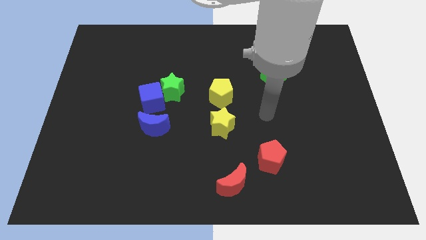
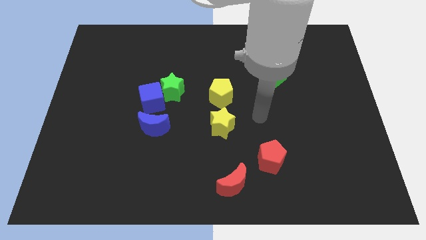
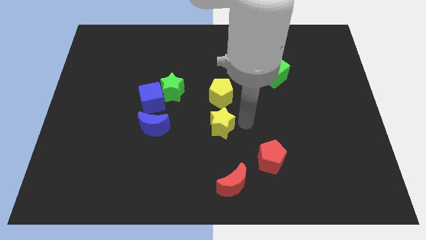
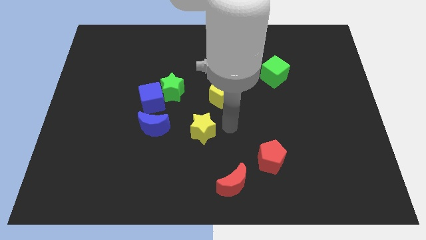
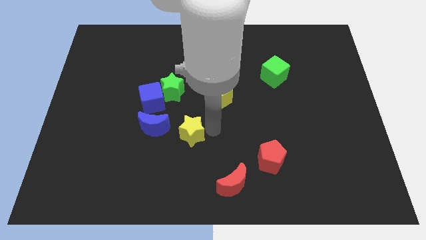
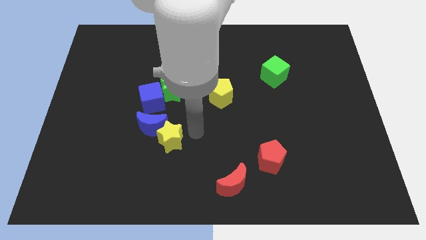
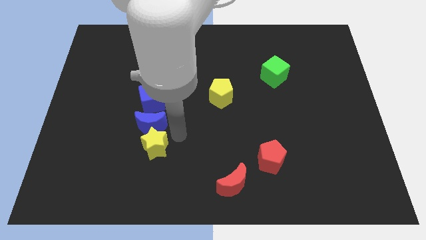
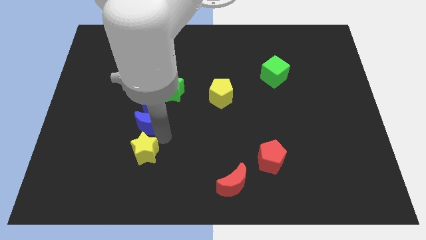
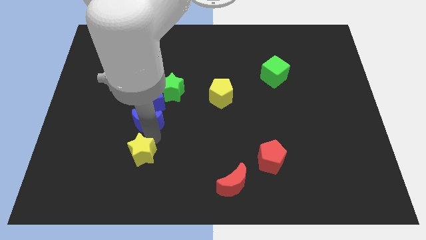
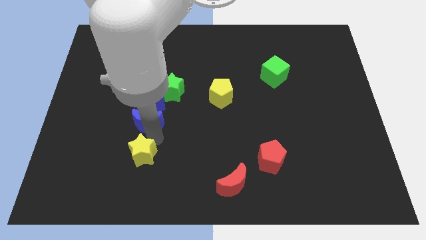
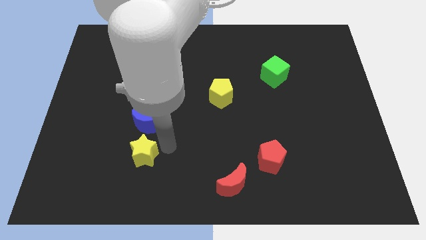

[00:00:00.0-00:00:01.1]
drag the yellow star below the blue moon

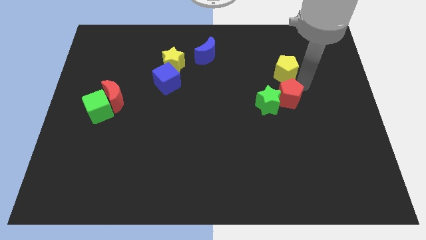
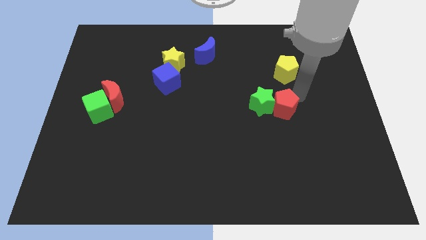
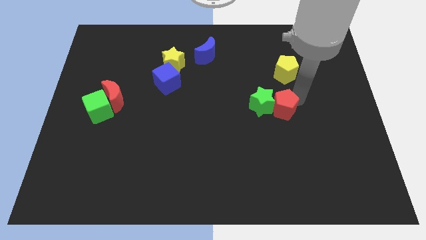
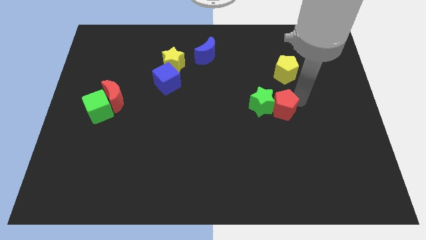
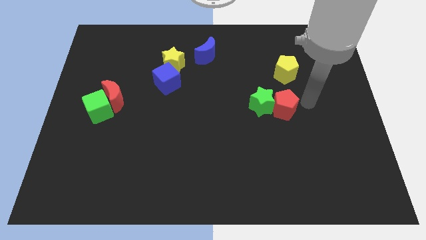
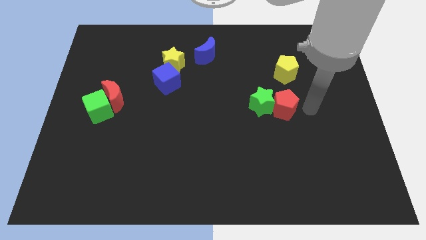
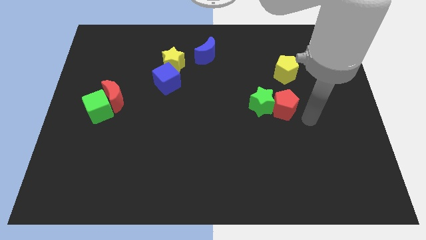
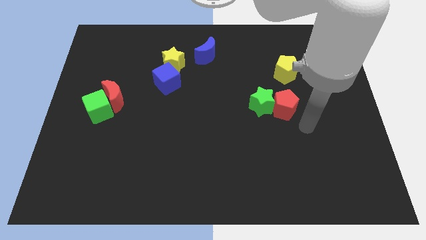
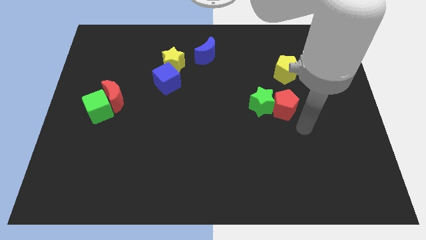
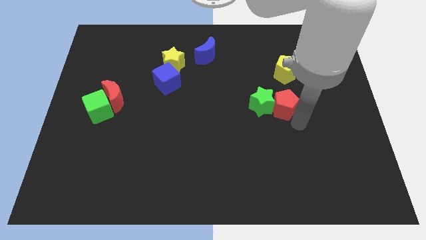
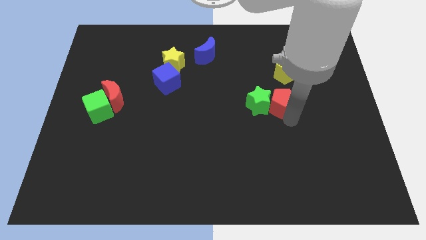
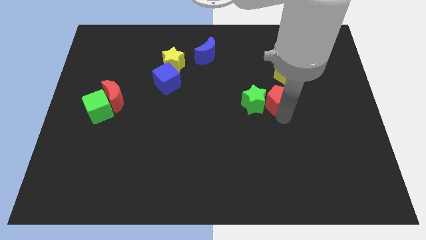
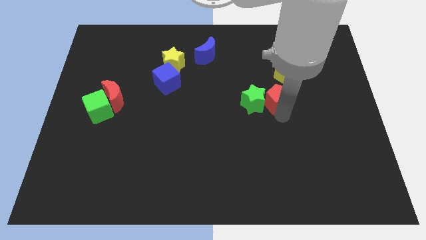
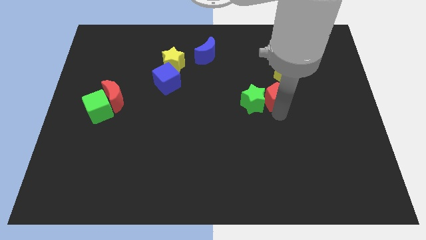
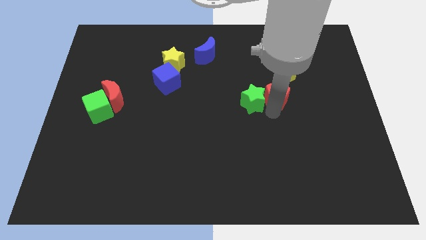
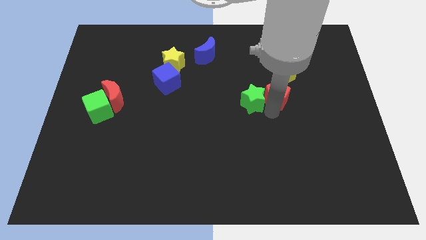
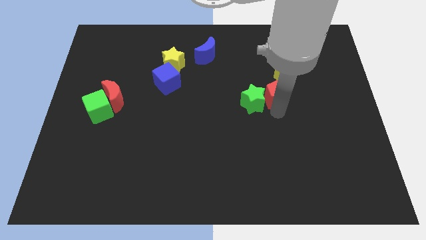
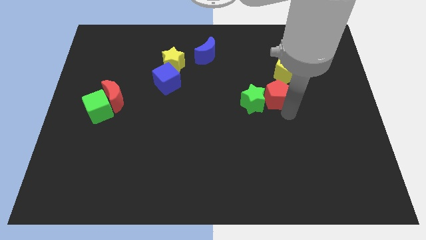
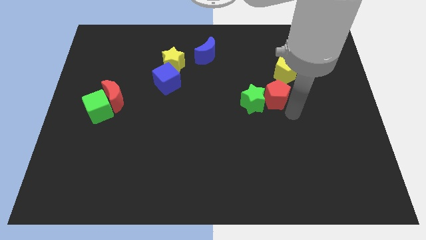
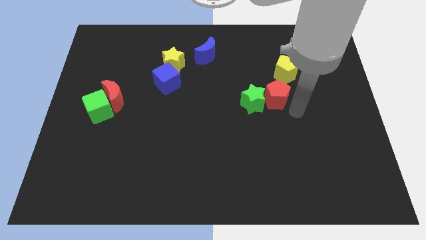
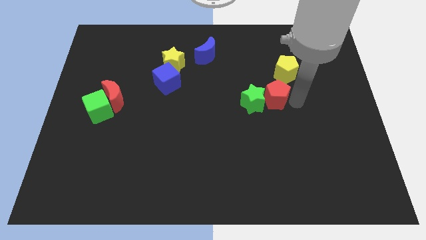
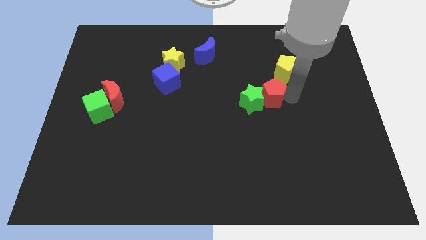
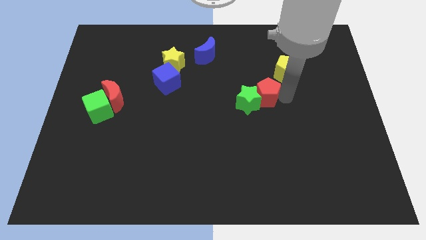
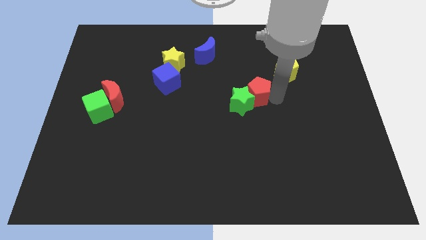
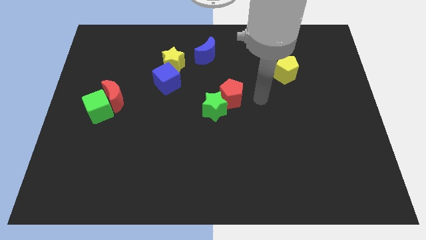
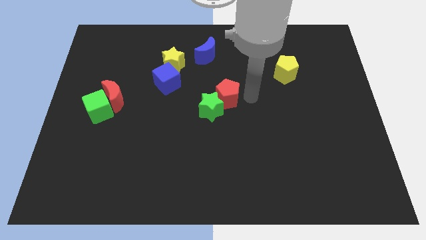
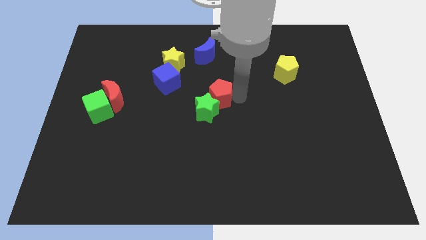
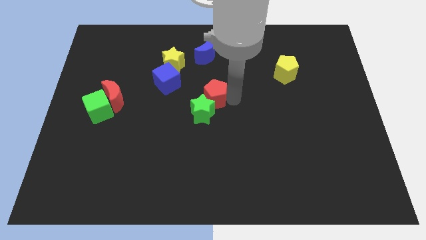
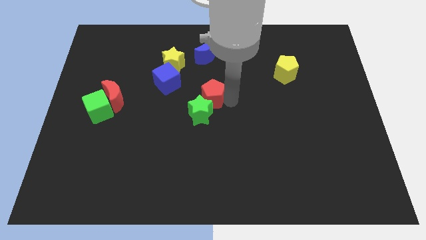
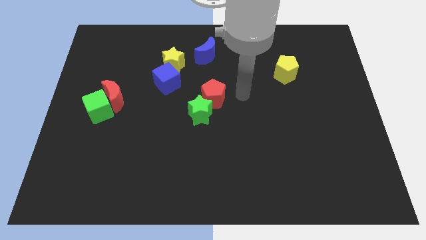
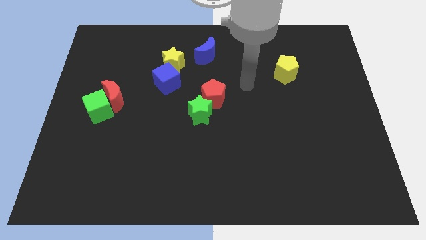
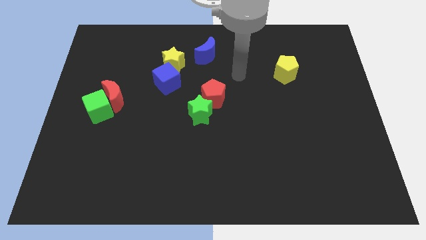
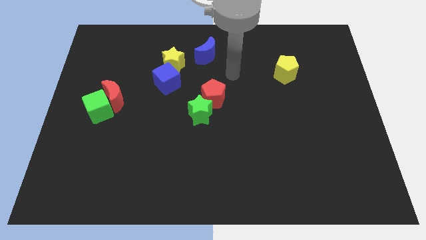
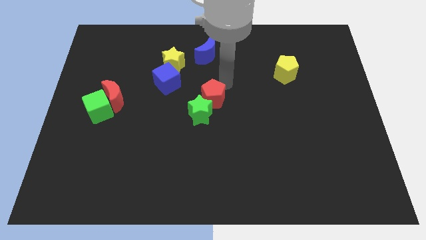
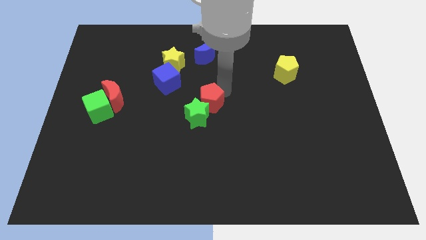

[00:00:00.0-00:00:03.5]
place the red pentagon and green star at the center of the board

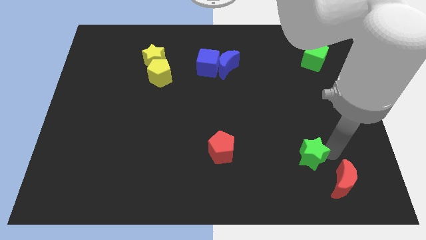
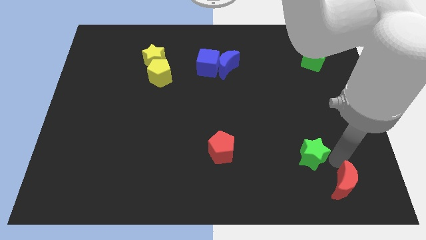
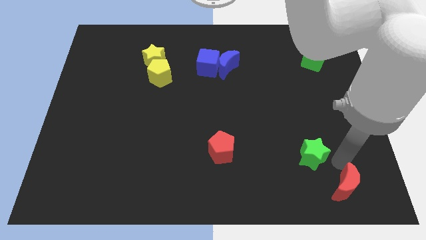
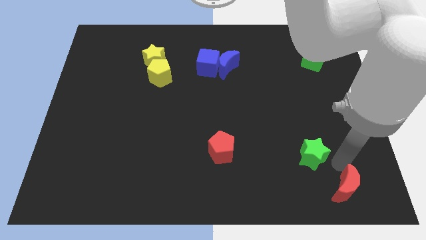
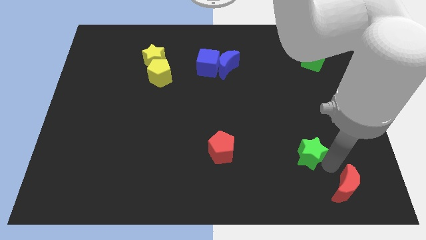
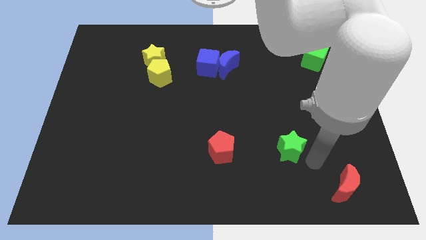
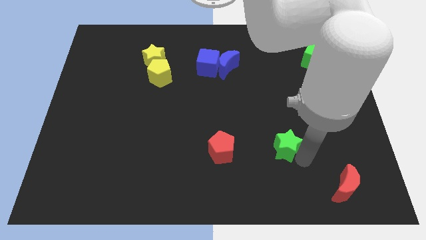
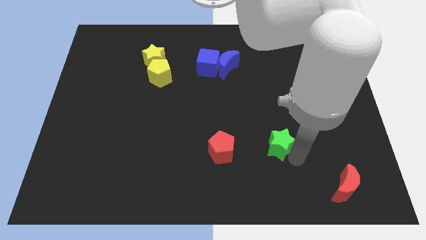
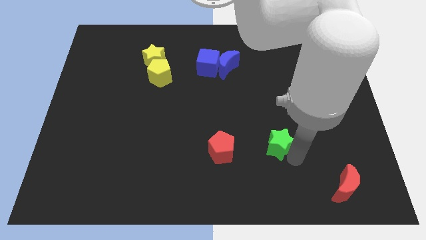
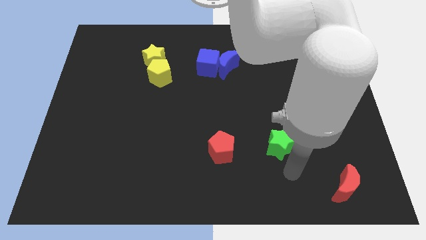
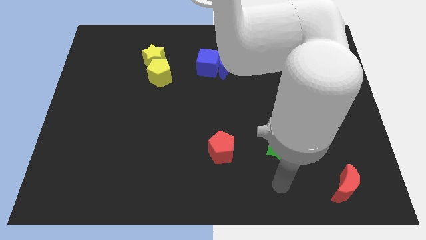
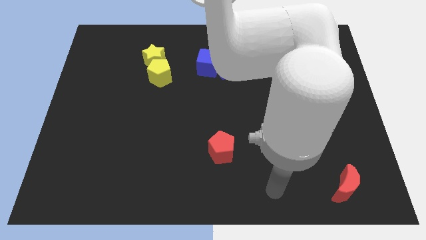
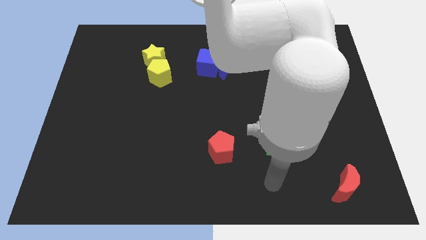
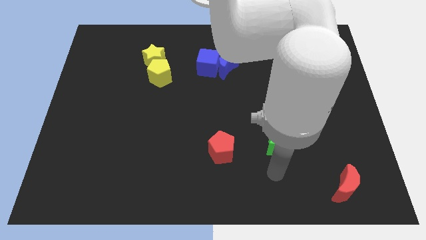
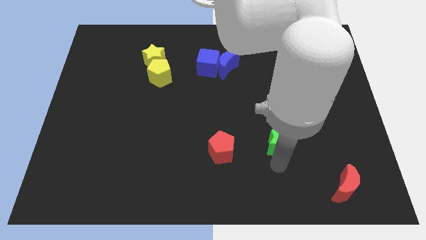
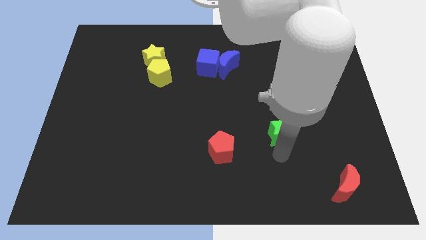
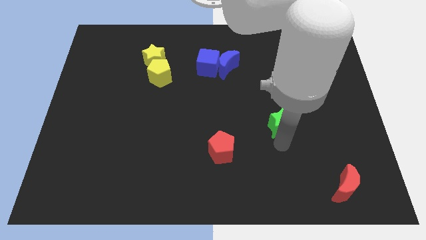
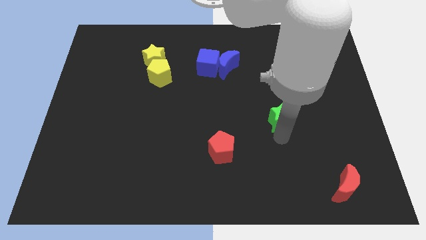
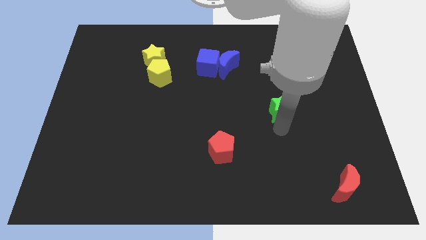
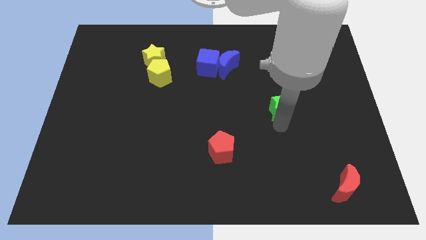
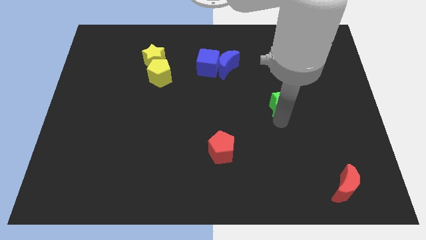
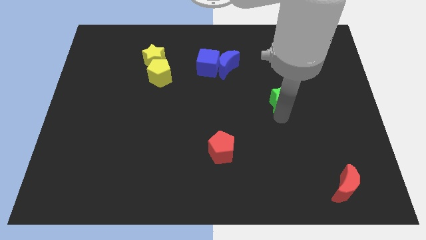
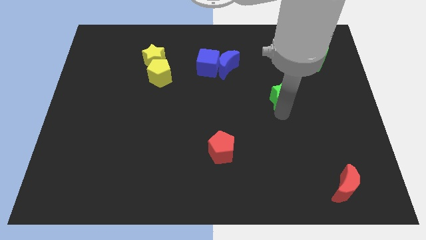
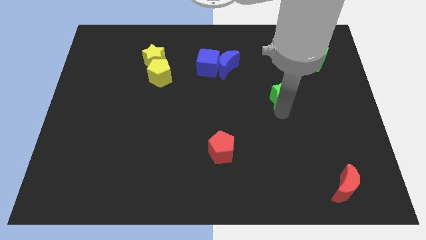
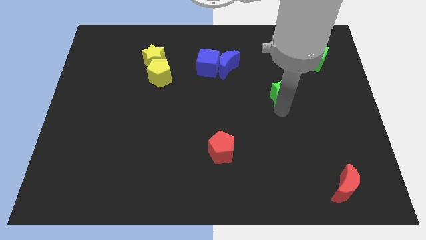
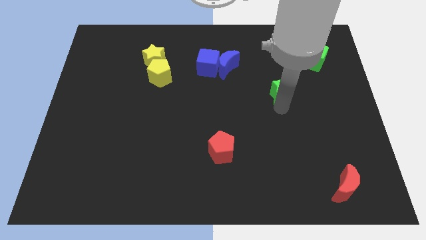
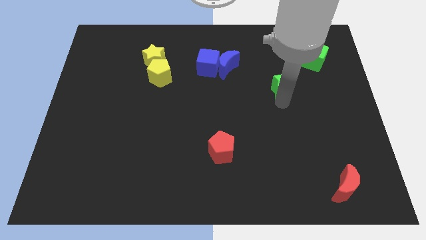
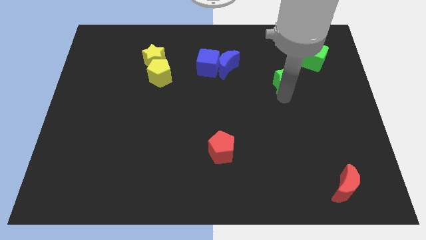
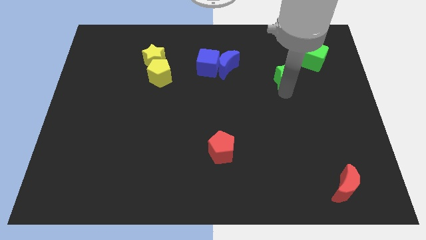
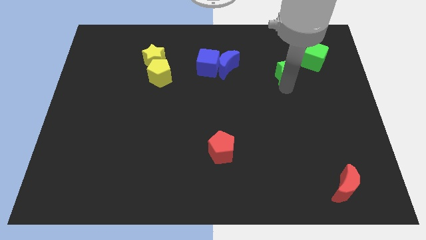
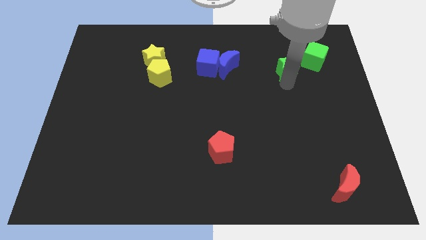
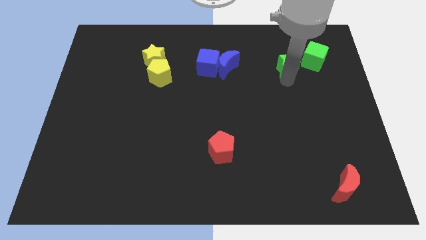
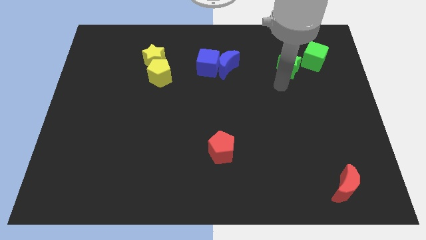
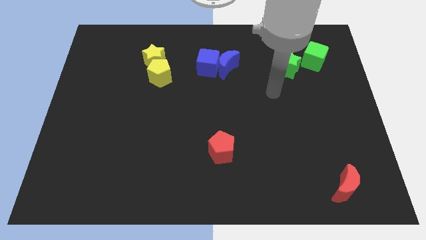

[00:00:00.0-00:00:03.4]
place the green star left to the green cube

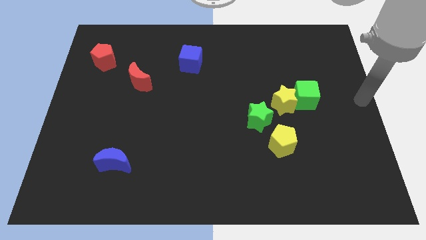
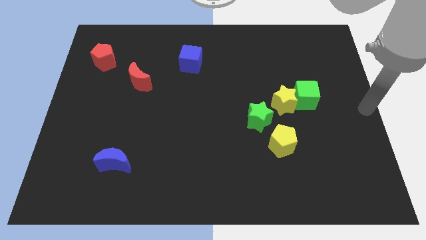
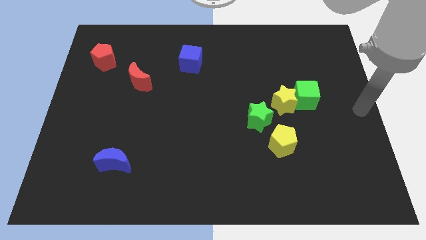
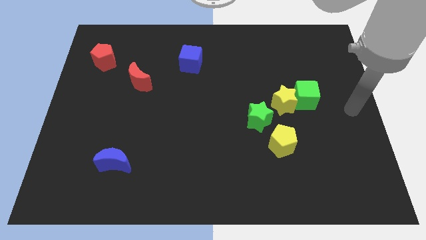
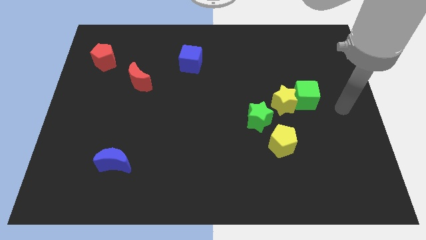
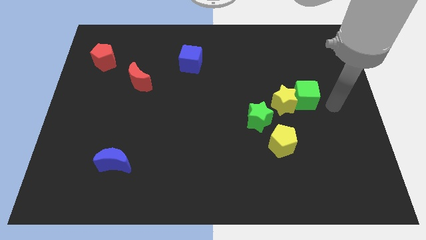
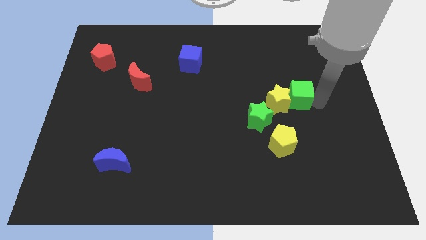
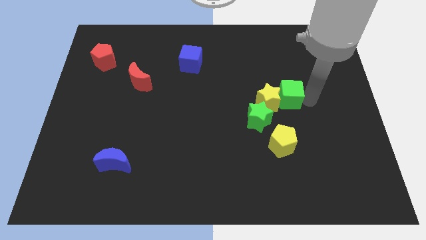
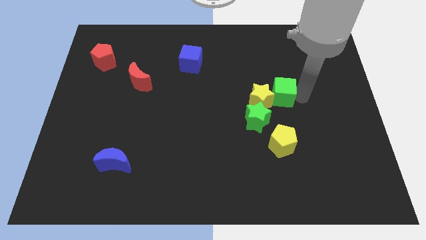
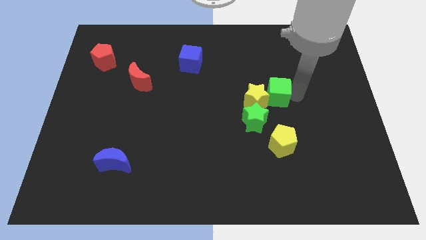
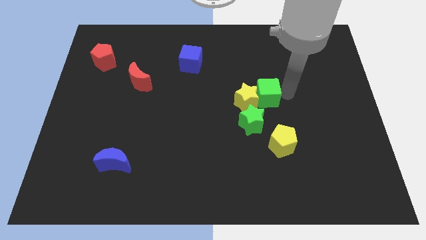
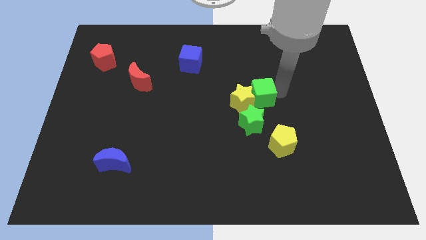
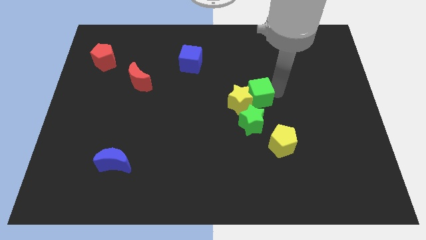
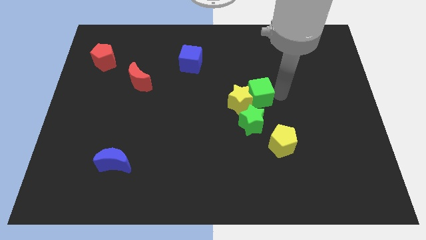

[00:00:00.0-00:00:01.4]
push the green blocks and yellow star slightly left
